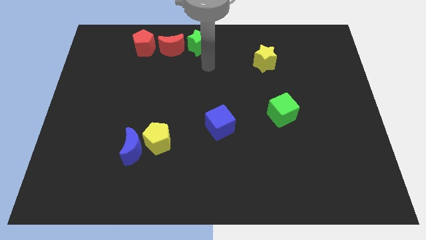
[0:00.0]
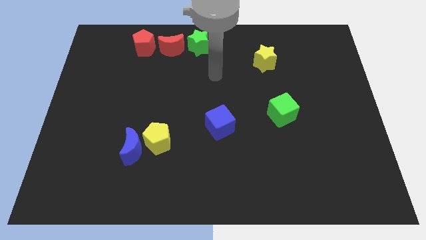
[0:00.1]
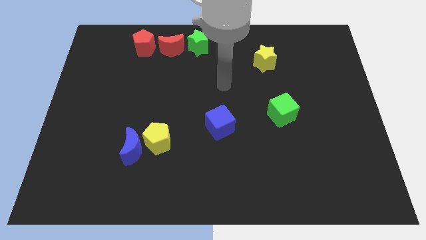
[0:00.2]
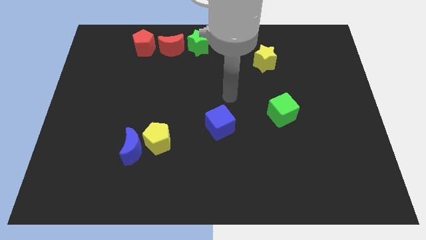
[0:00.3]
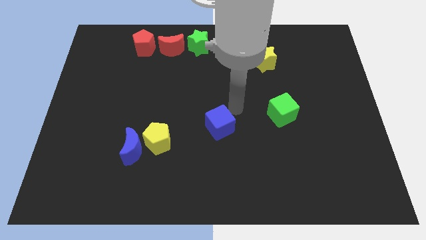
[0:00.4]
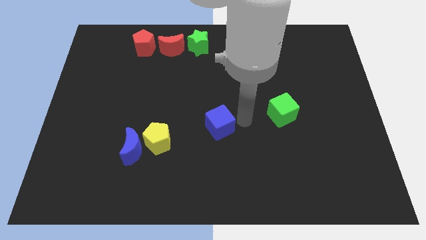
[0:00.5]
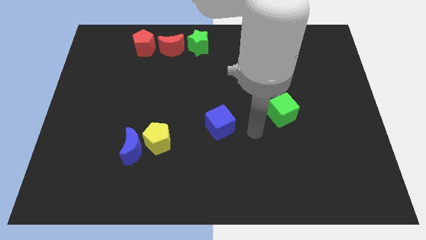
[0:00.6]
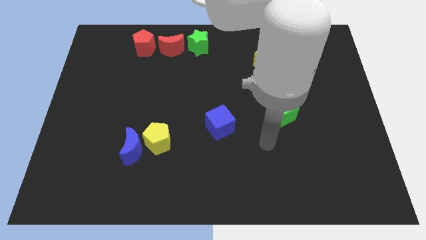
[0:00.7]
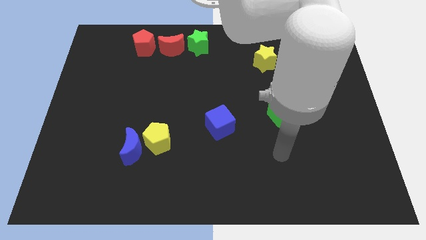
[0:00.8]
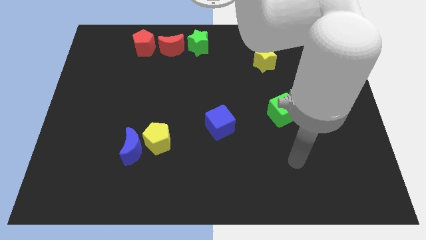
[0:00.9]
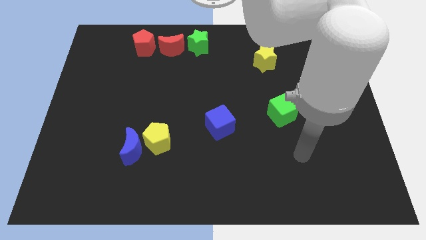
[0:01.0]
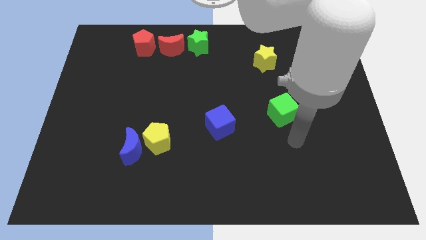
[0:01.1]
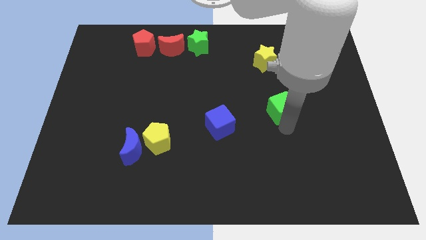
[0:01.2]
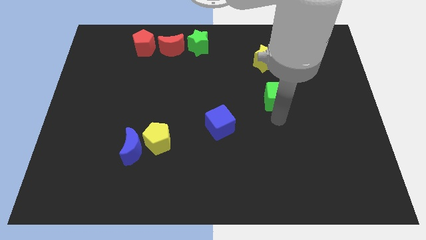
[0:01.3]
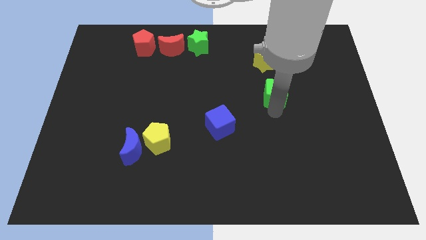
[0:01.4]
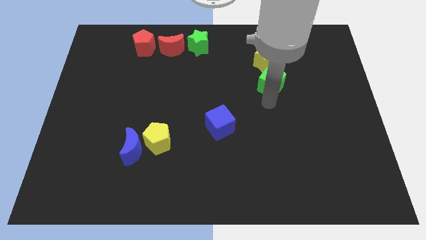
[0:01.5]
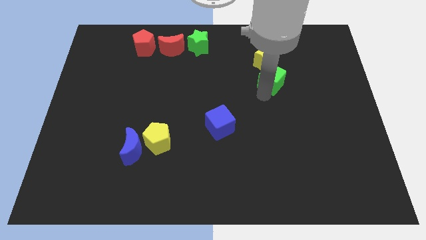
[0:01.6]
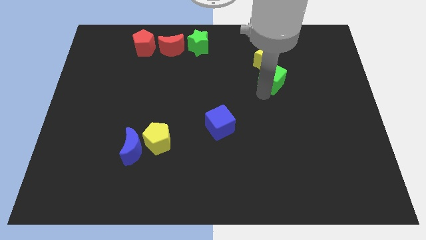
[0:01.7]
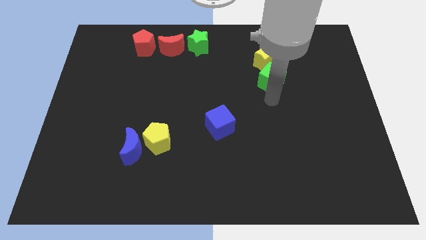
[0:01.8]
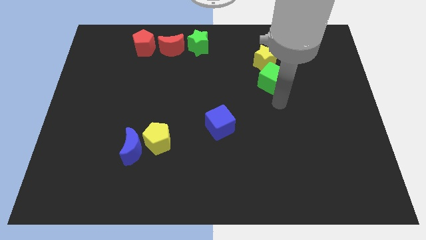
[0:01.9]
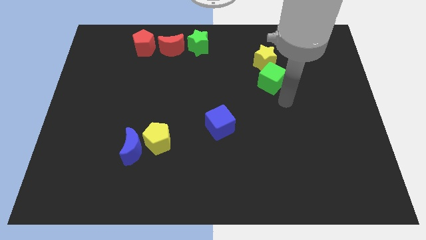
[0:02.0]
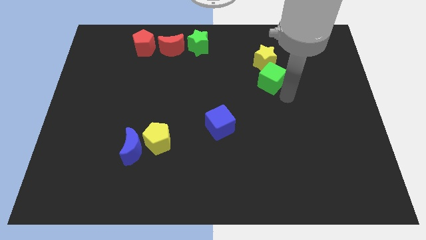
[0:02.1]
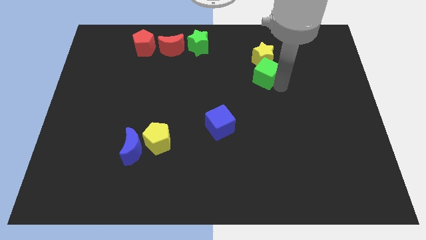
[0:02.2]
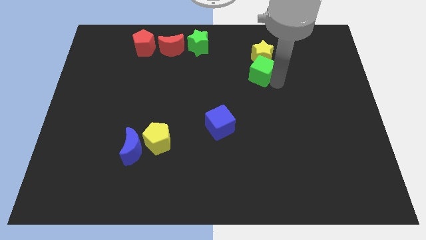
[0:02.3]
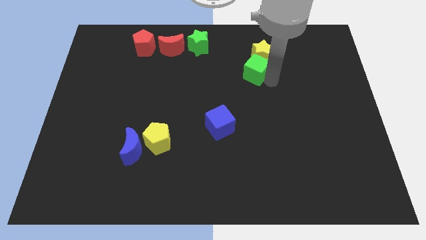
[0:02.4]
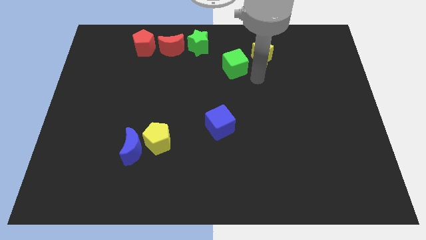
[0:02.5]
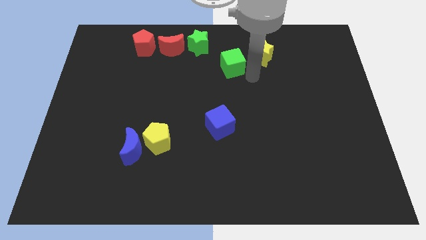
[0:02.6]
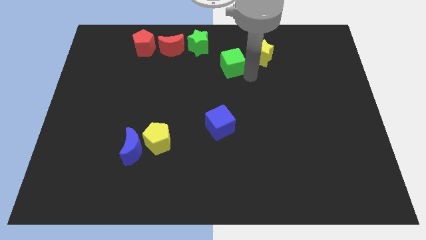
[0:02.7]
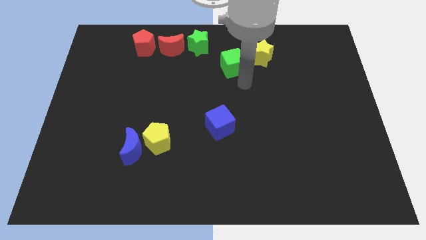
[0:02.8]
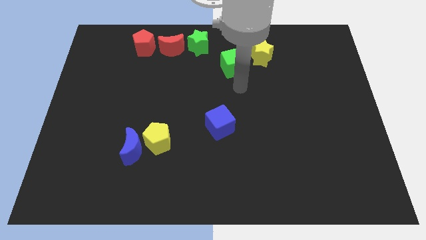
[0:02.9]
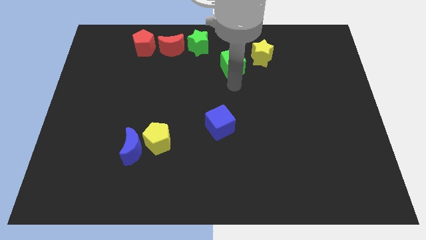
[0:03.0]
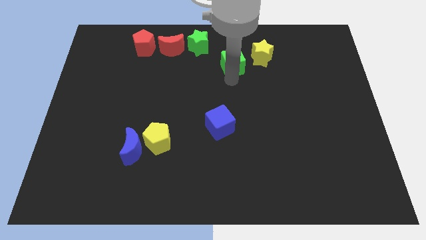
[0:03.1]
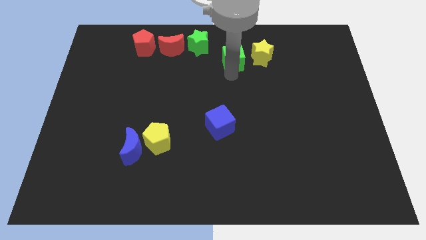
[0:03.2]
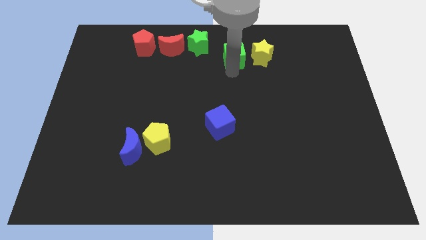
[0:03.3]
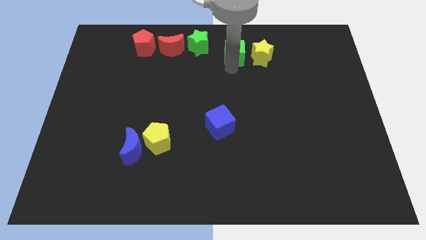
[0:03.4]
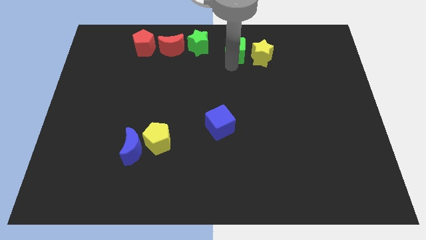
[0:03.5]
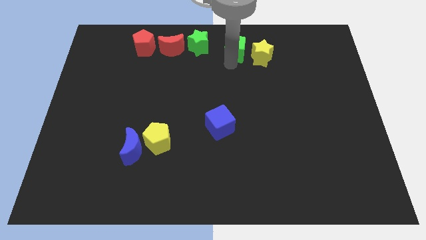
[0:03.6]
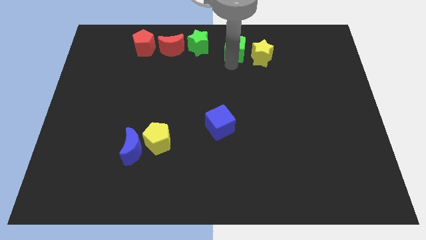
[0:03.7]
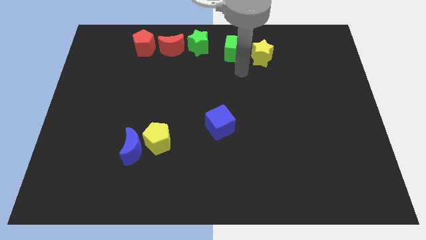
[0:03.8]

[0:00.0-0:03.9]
place the green cube at right side of the green star

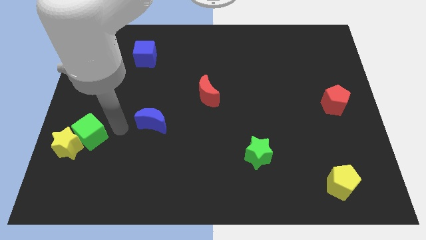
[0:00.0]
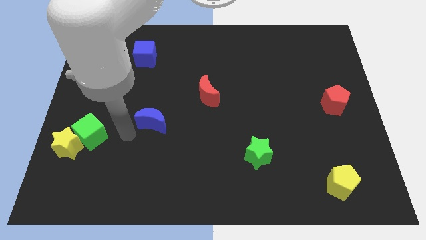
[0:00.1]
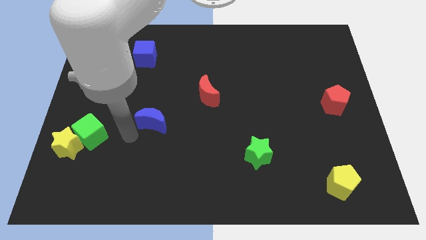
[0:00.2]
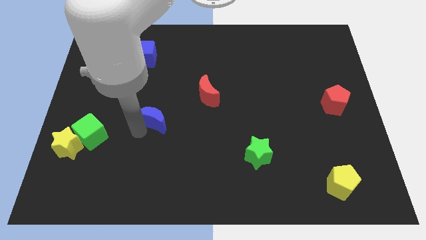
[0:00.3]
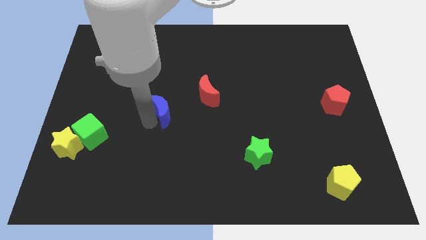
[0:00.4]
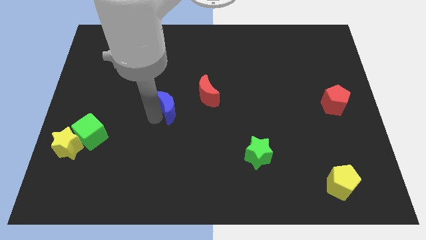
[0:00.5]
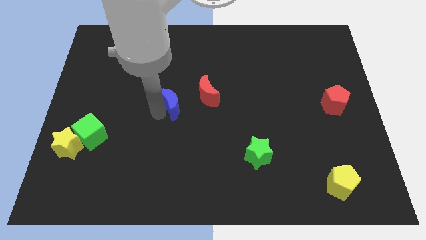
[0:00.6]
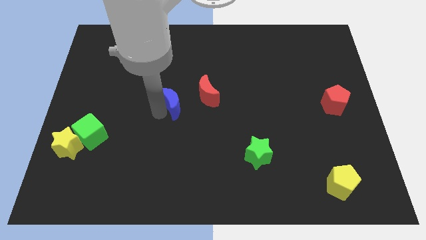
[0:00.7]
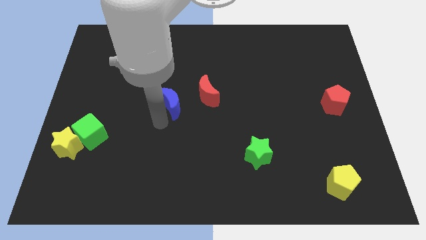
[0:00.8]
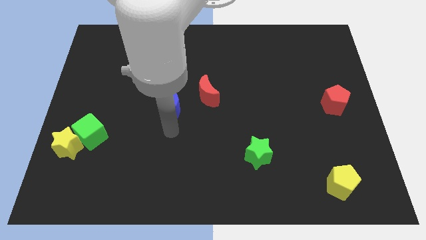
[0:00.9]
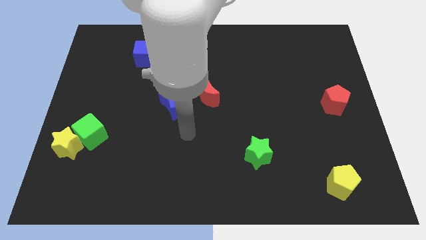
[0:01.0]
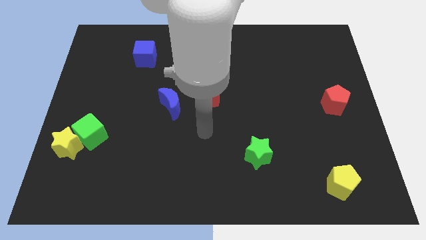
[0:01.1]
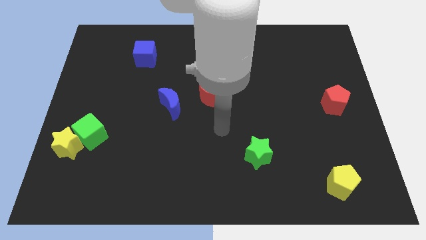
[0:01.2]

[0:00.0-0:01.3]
move the blue moon left to the red moon

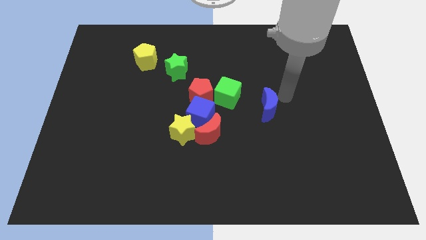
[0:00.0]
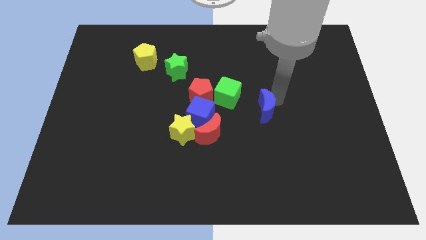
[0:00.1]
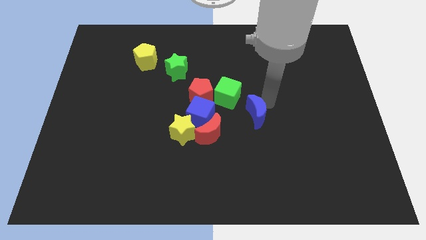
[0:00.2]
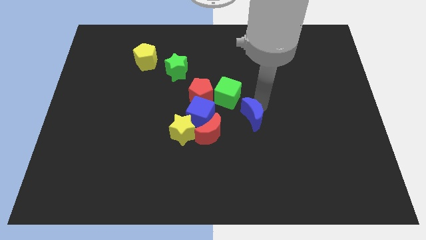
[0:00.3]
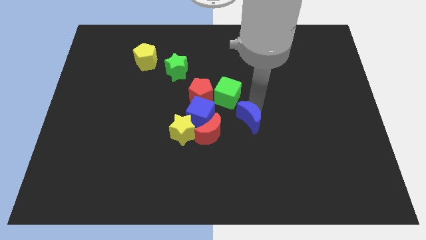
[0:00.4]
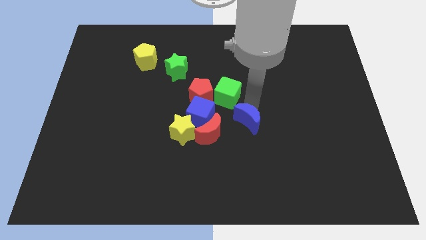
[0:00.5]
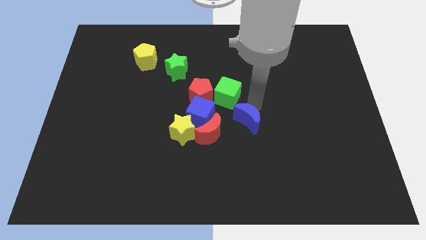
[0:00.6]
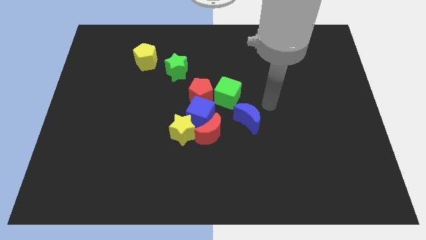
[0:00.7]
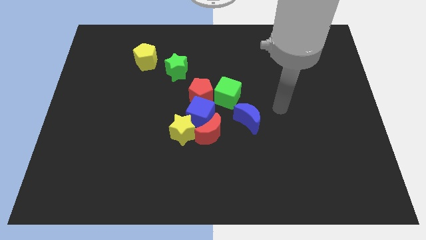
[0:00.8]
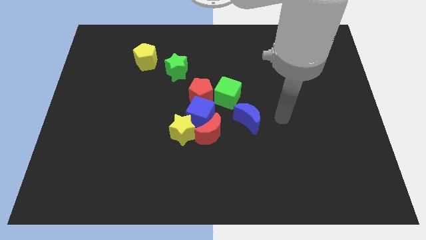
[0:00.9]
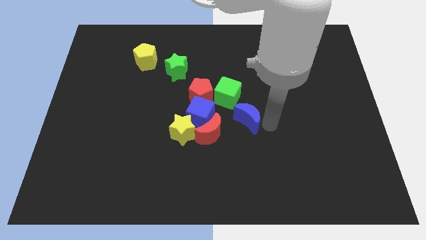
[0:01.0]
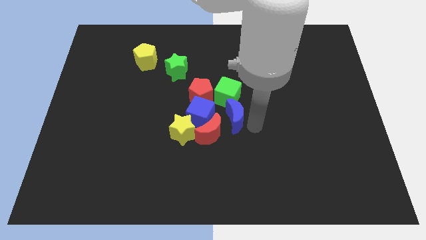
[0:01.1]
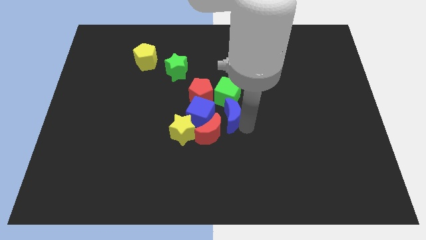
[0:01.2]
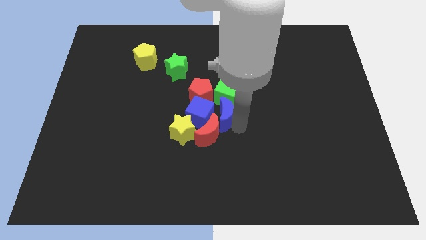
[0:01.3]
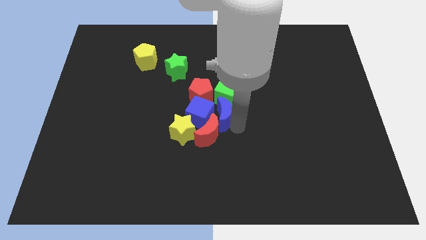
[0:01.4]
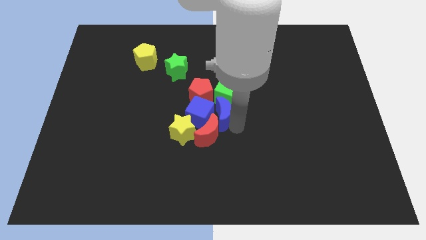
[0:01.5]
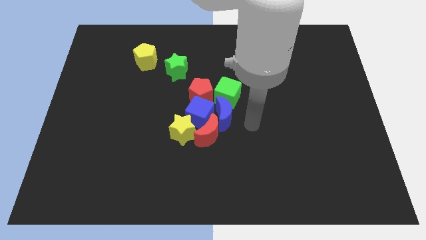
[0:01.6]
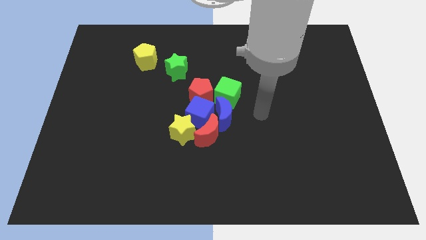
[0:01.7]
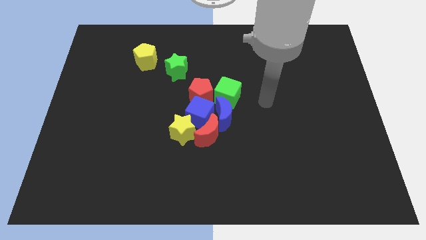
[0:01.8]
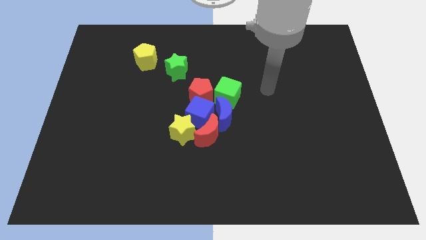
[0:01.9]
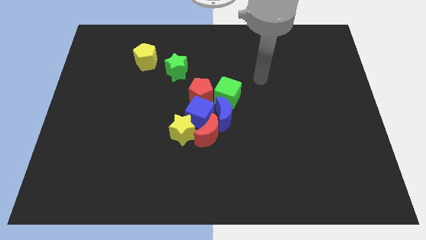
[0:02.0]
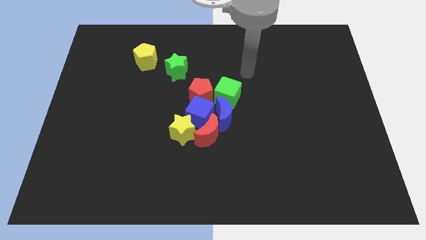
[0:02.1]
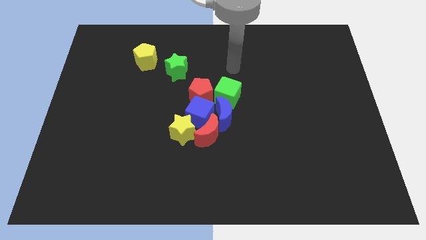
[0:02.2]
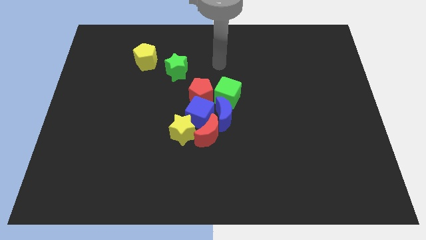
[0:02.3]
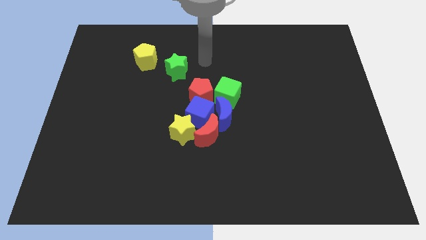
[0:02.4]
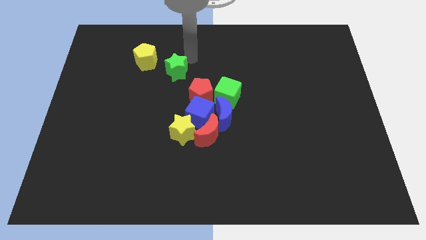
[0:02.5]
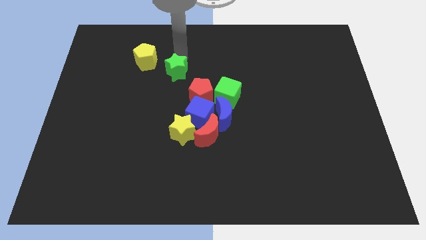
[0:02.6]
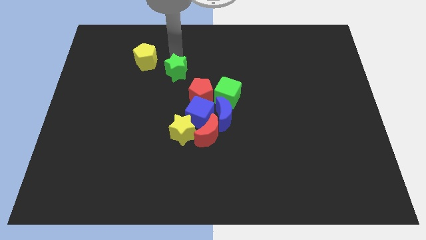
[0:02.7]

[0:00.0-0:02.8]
push the blue crescent to the right of the blue cube

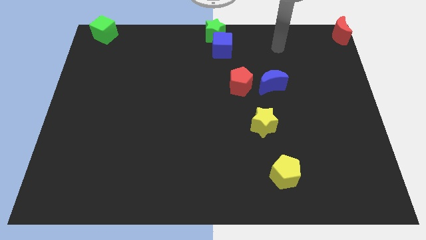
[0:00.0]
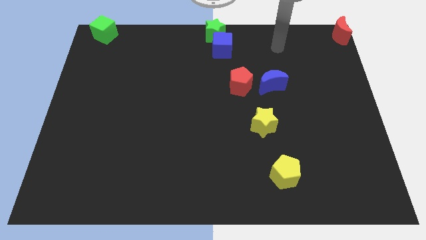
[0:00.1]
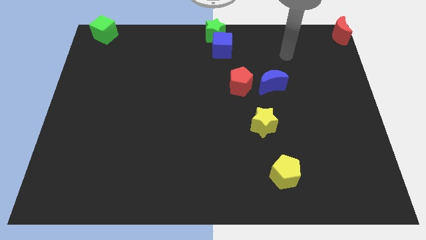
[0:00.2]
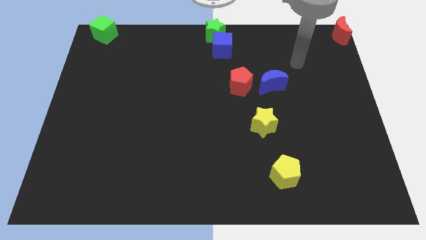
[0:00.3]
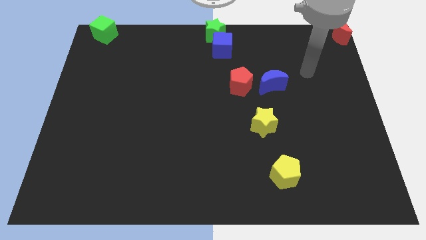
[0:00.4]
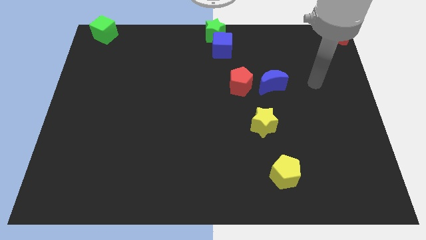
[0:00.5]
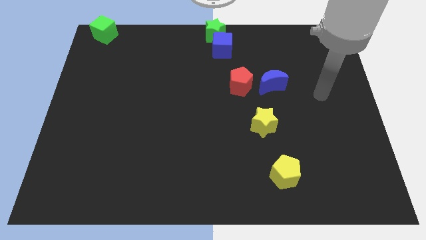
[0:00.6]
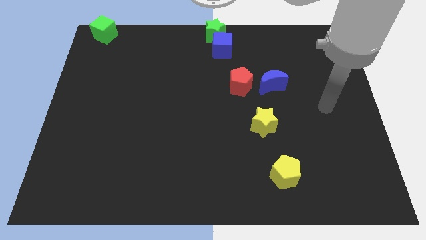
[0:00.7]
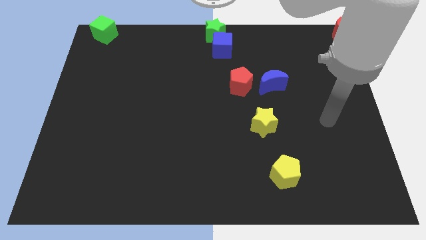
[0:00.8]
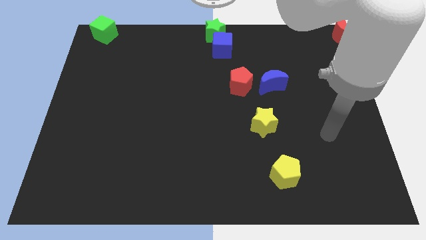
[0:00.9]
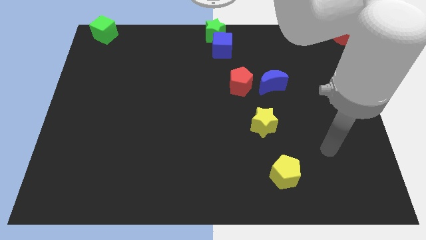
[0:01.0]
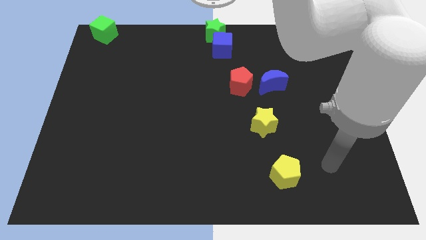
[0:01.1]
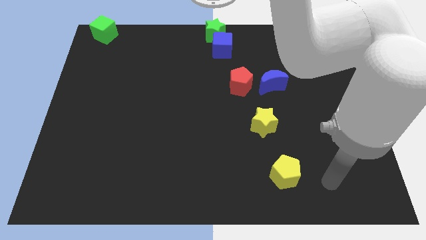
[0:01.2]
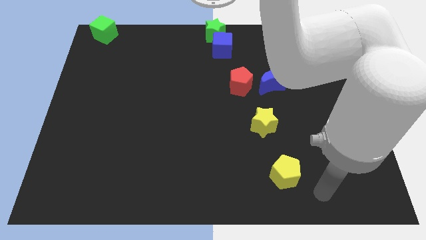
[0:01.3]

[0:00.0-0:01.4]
move the arm right to the yellow pentagon
